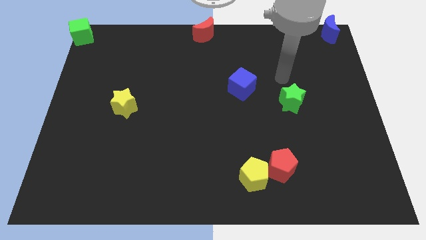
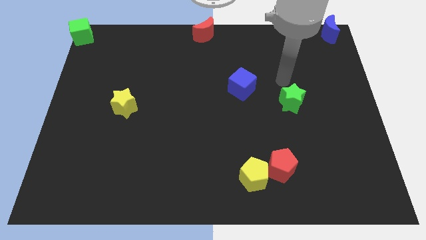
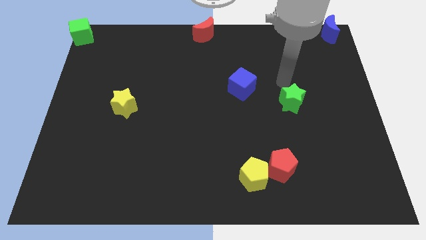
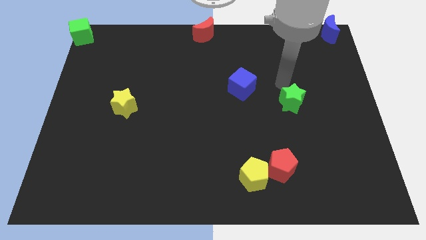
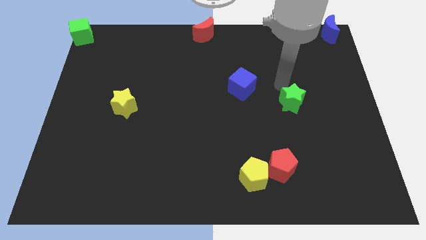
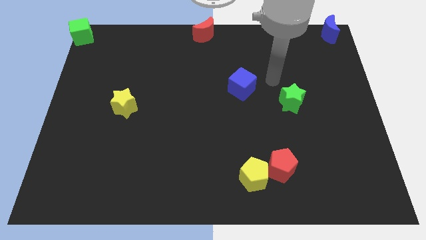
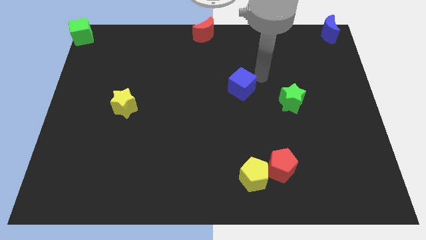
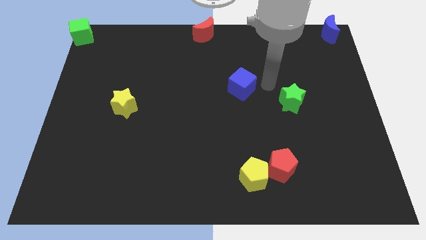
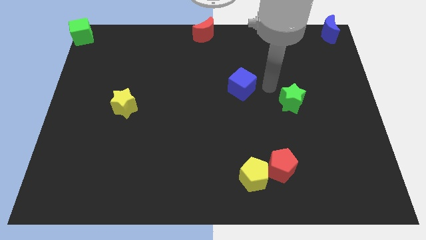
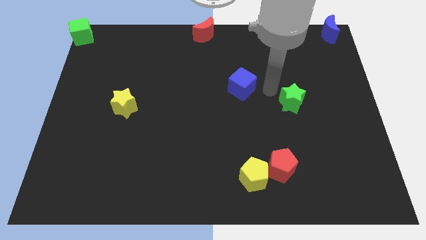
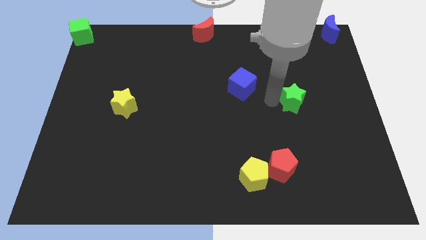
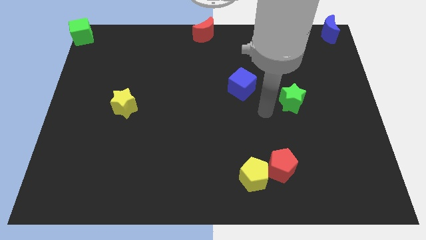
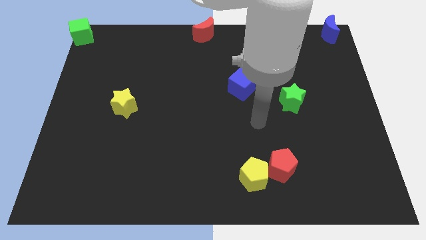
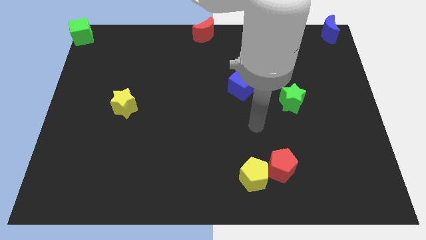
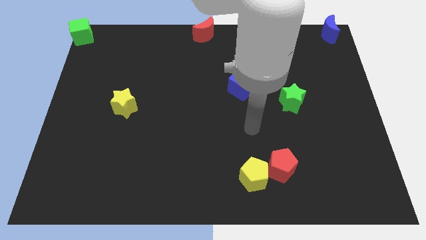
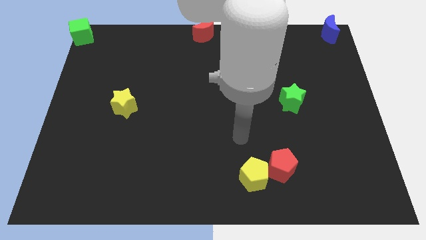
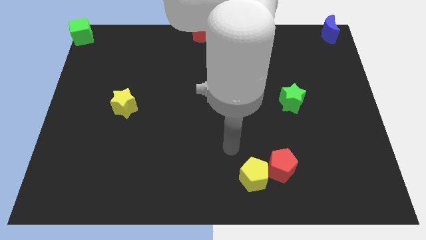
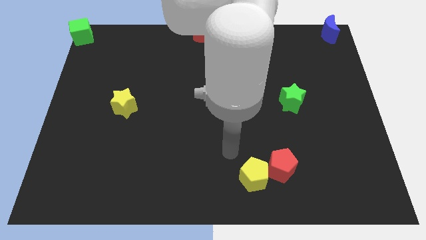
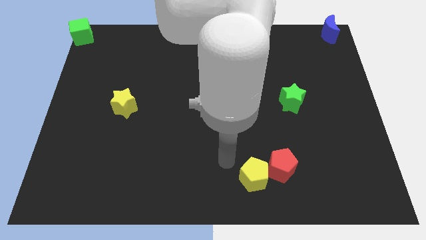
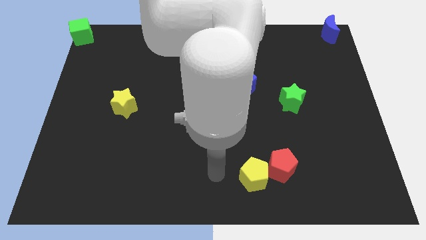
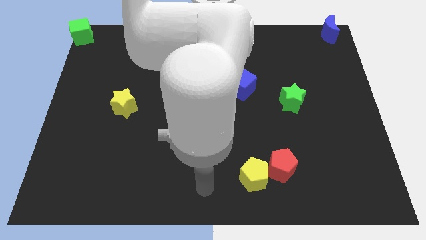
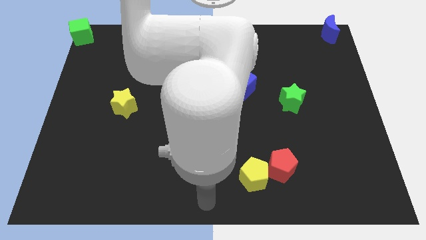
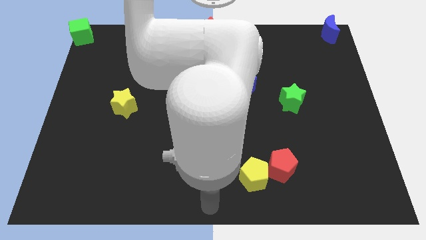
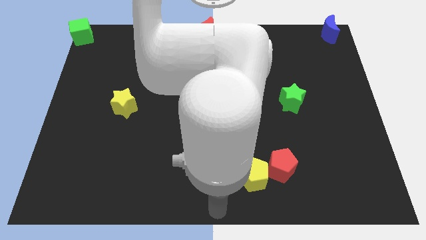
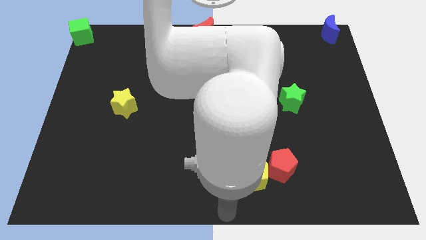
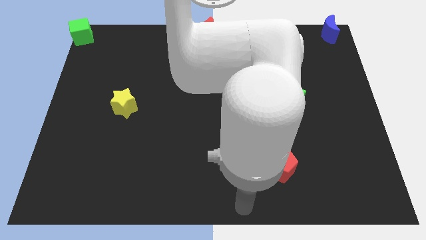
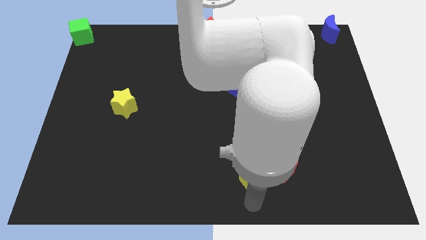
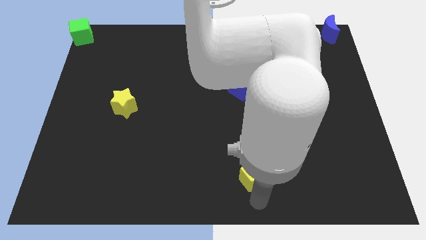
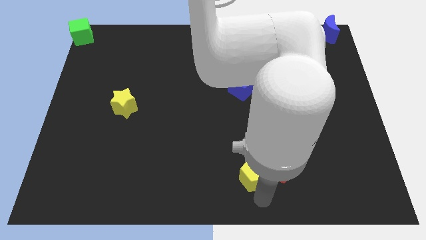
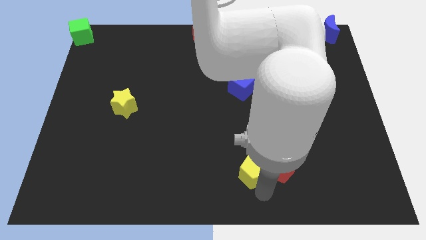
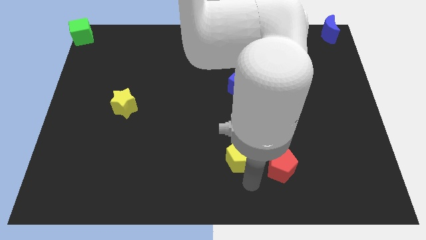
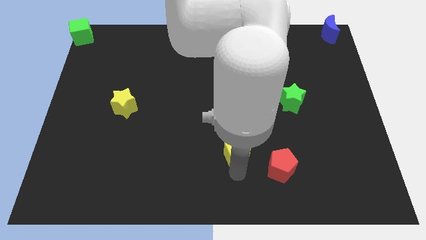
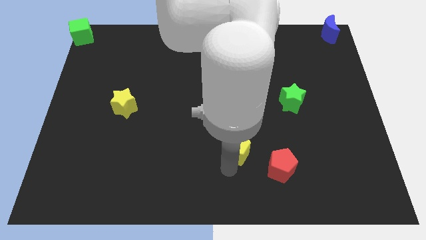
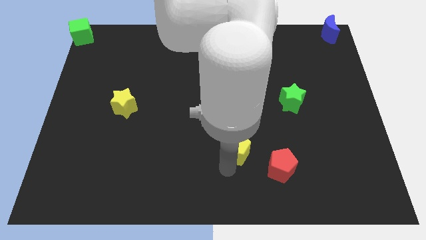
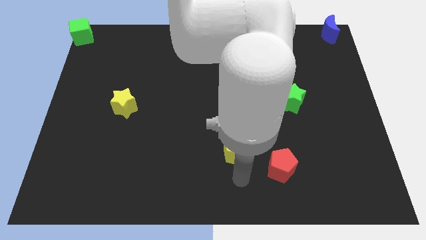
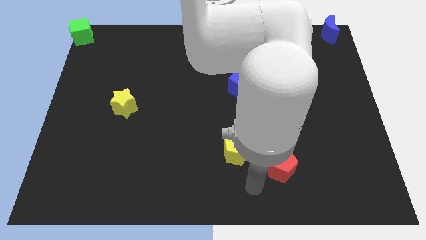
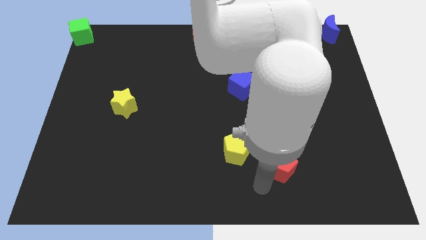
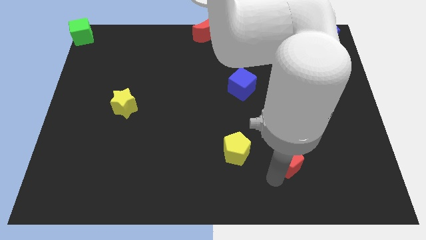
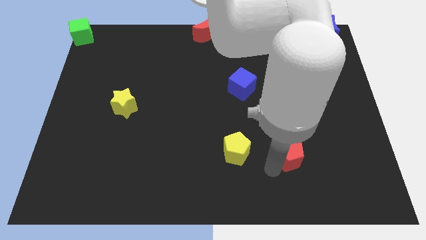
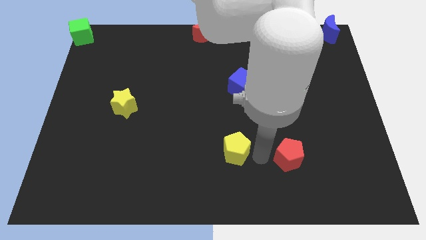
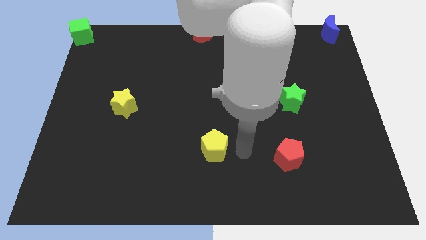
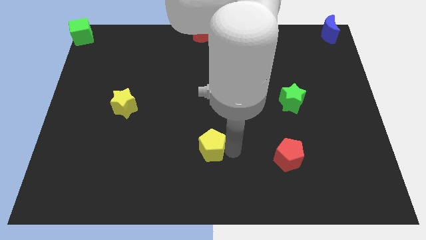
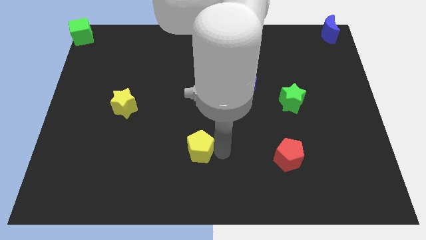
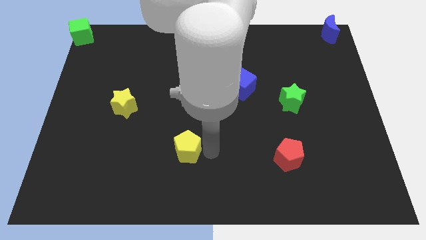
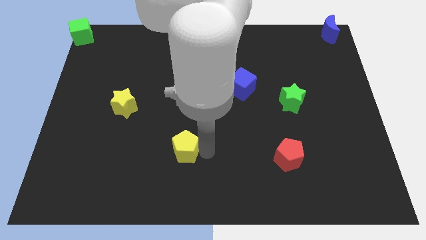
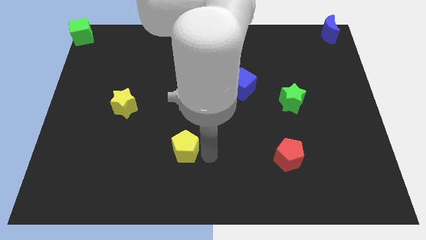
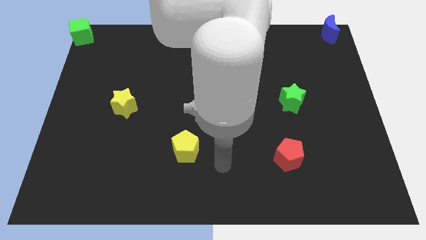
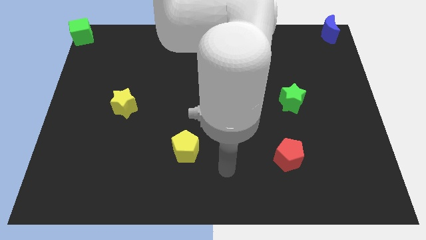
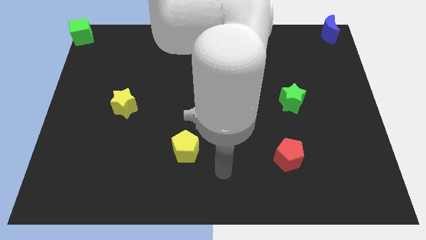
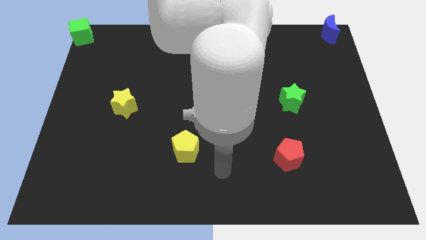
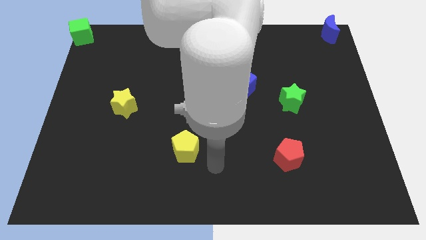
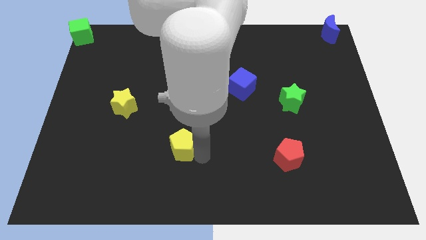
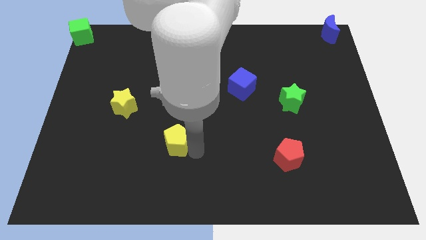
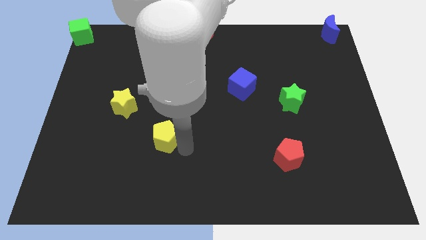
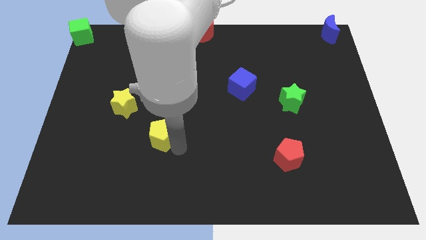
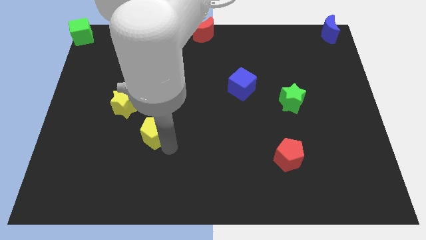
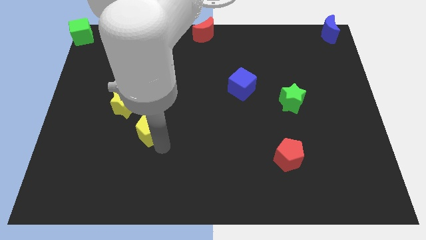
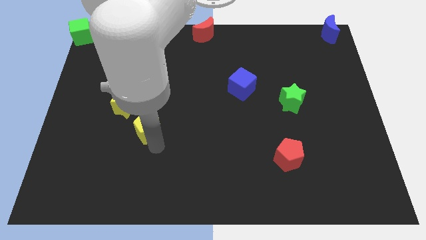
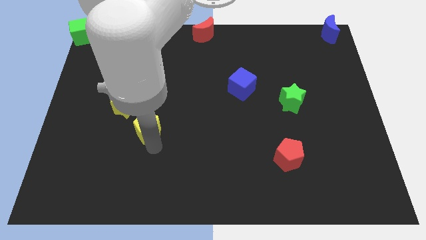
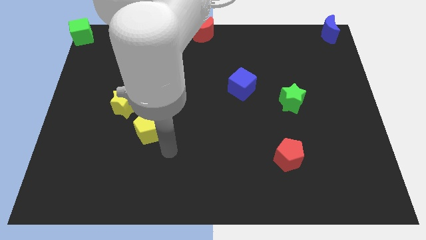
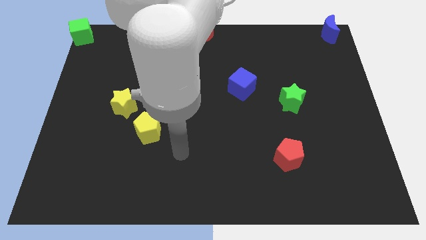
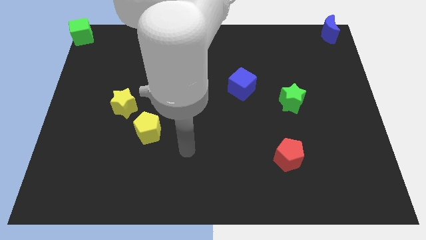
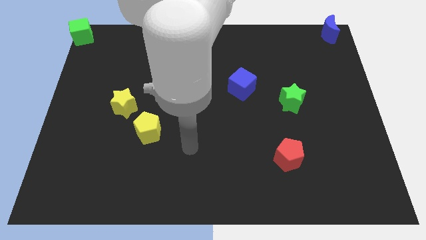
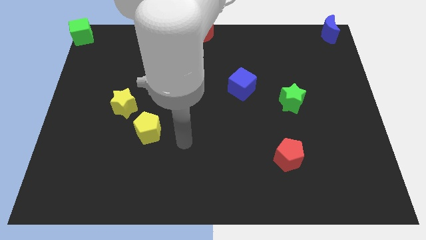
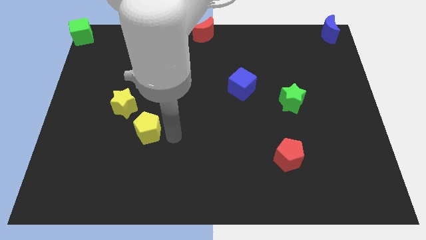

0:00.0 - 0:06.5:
move yellow pentagon diagonally below the yellow star

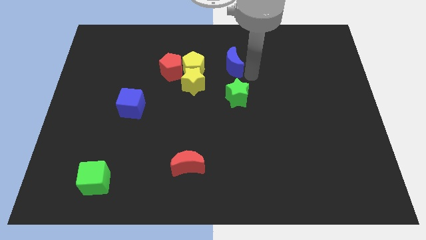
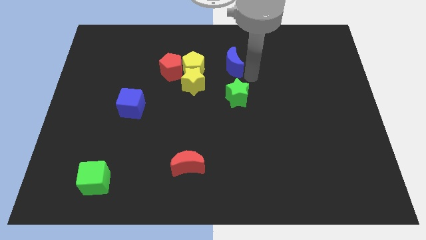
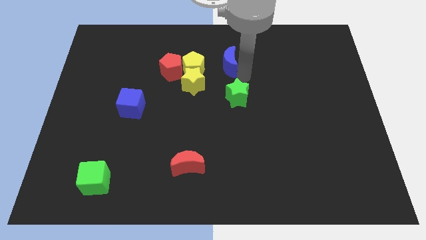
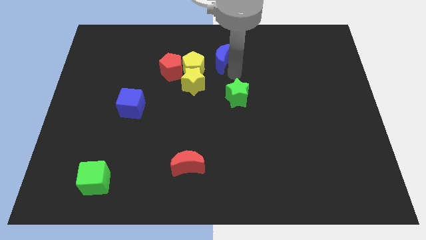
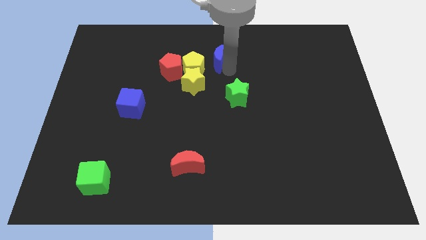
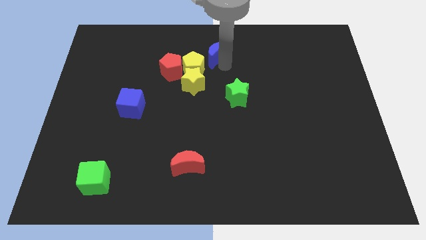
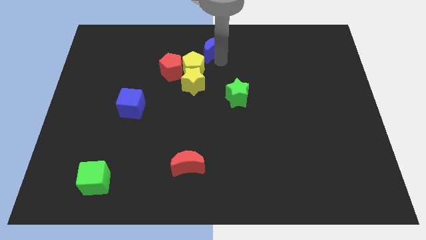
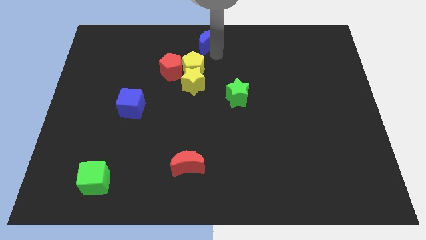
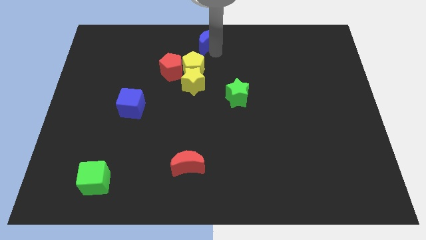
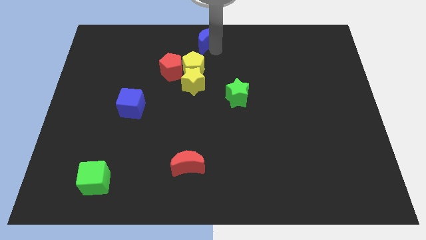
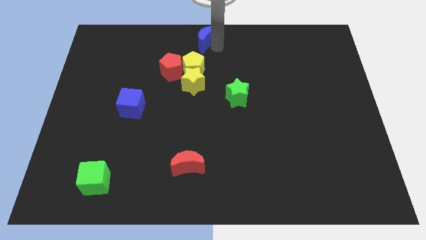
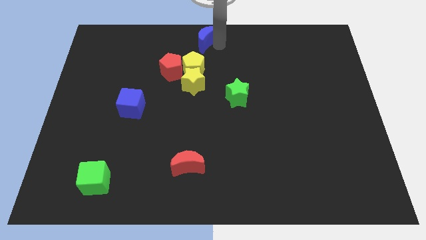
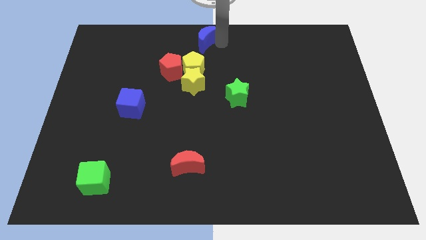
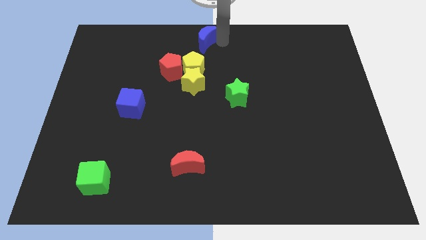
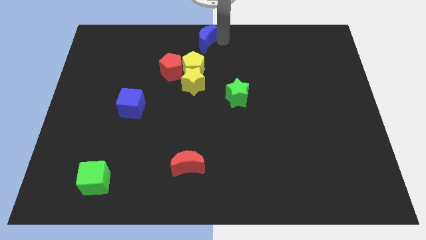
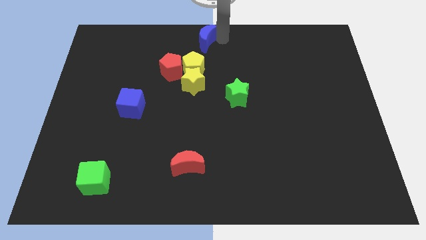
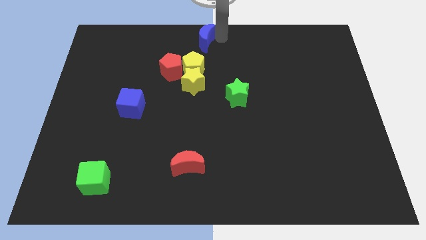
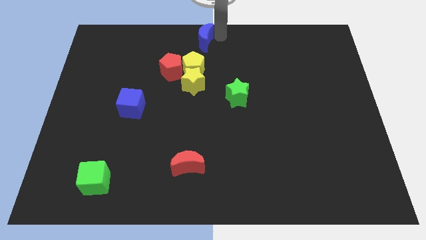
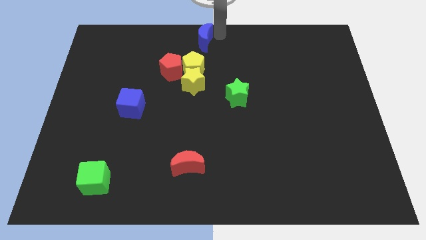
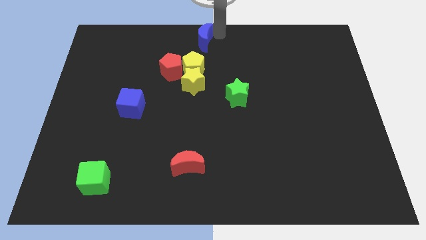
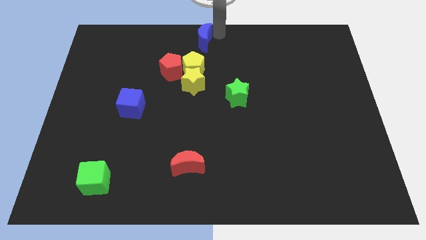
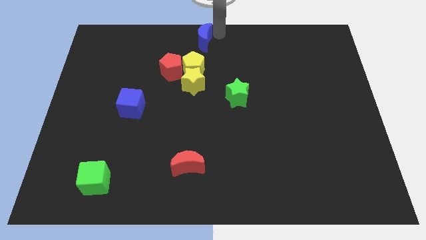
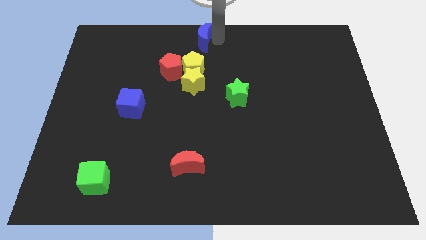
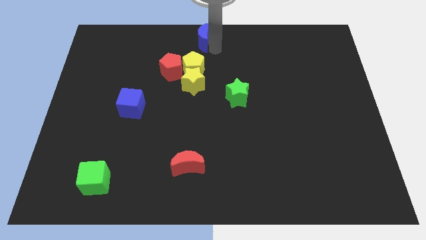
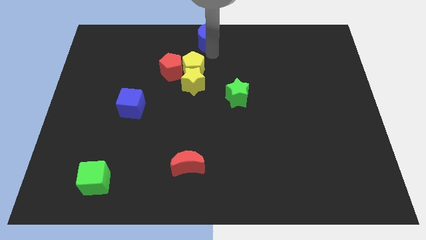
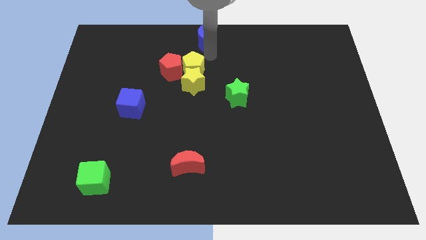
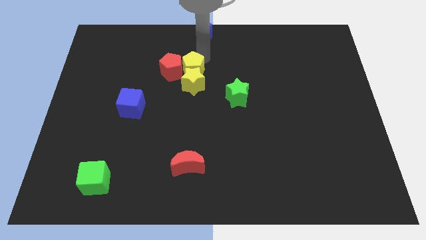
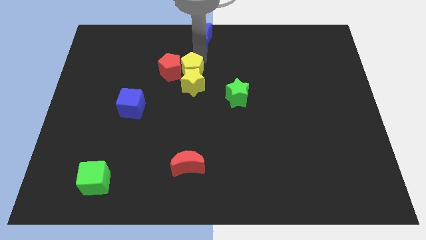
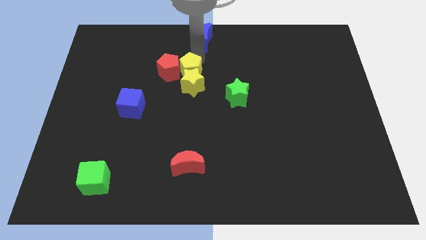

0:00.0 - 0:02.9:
move the blue moon to the top center of the board
